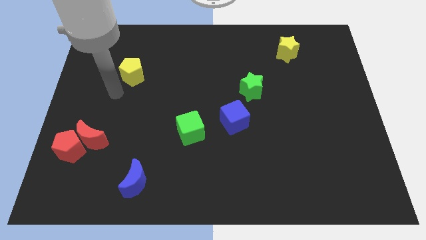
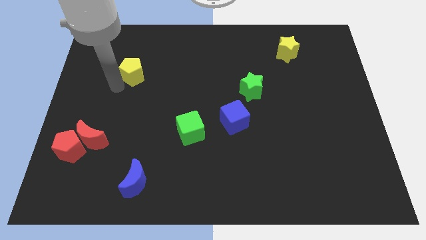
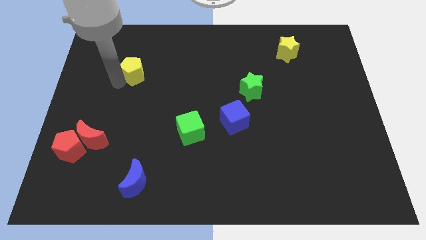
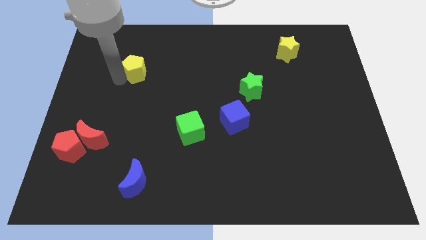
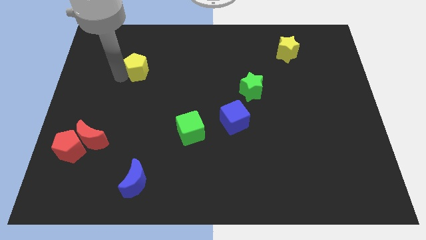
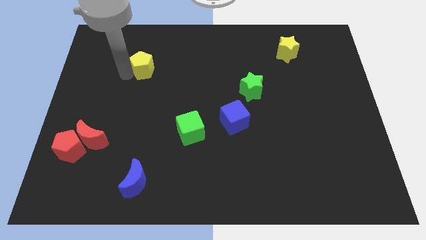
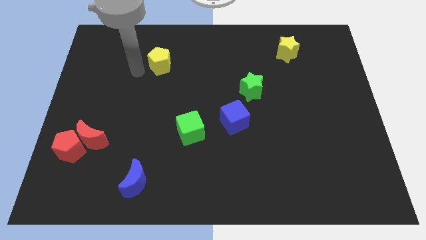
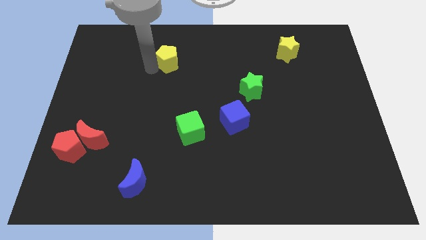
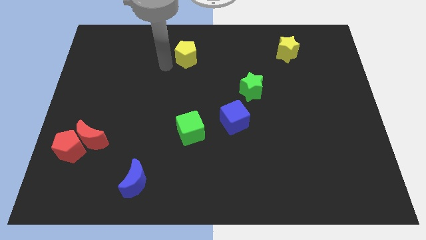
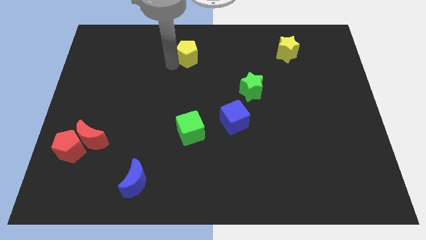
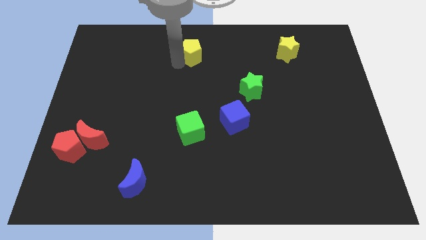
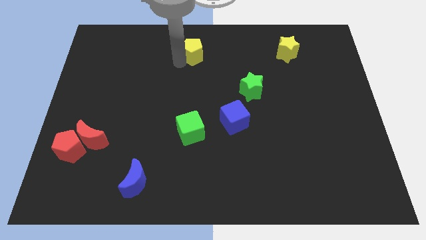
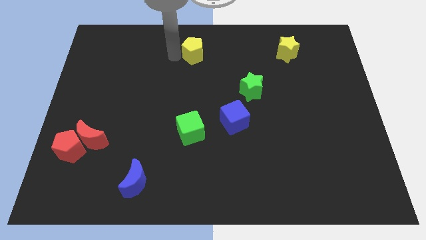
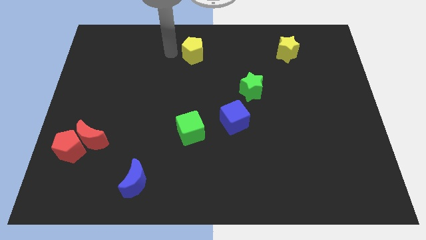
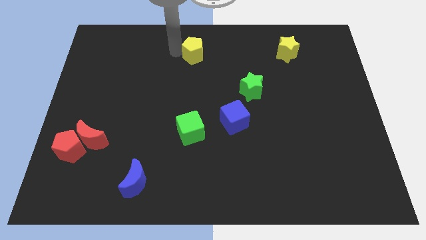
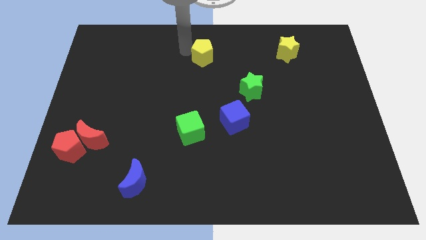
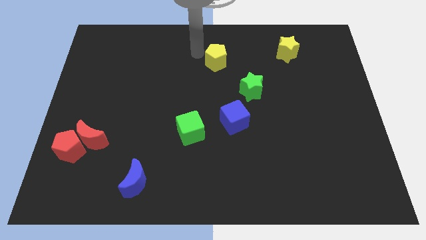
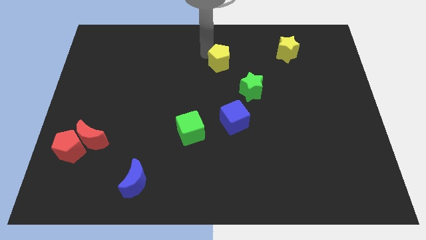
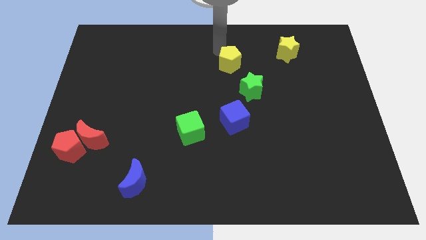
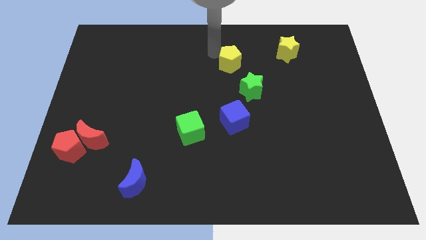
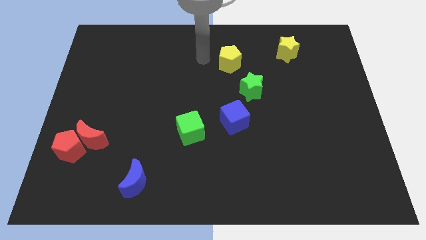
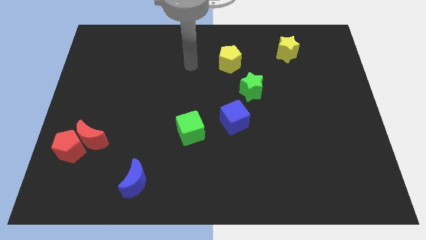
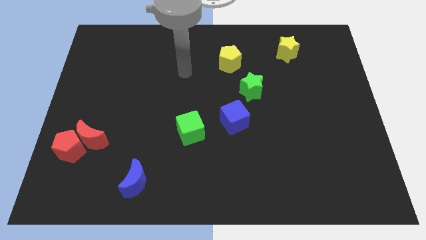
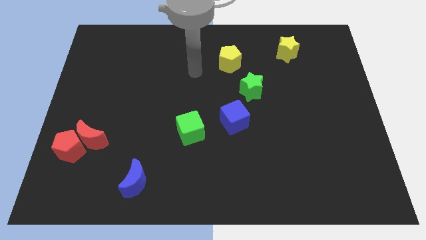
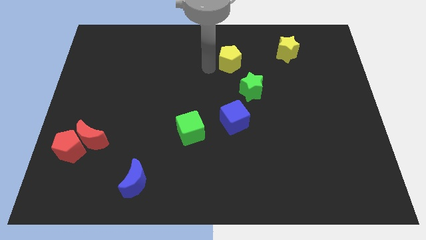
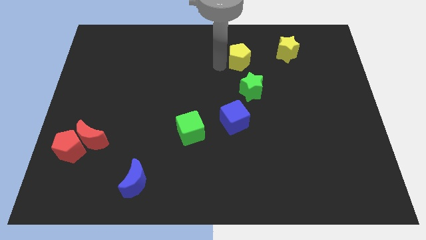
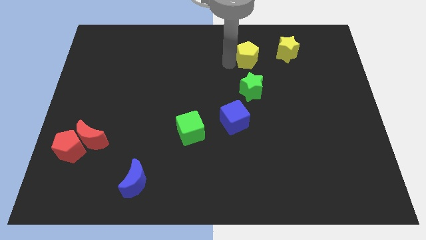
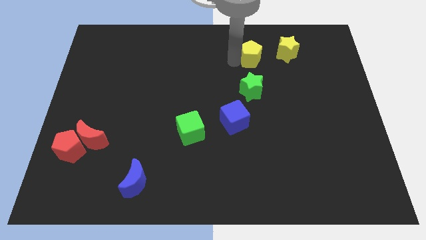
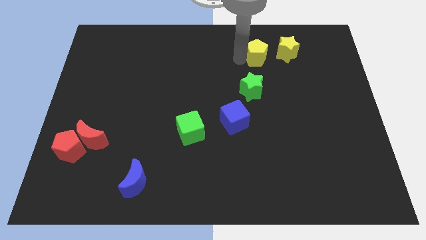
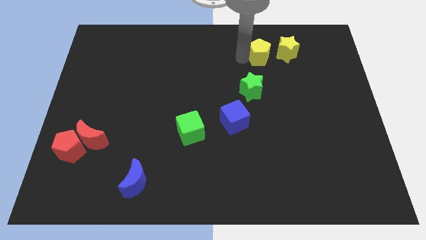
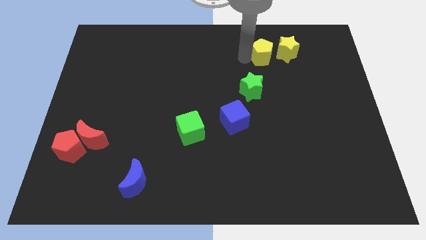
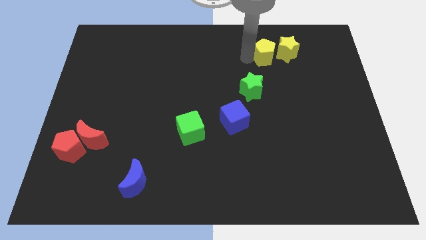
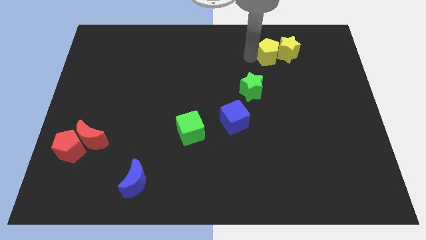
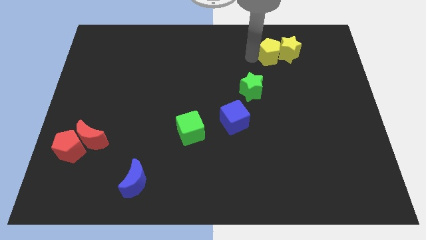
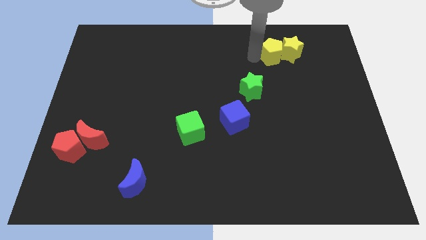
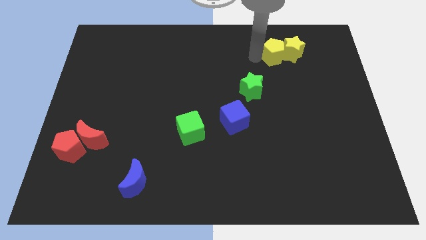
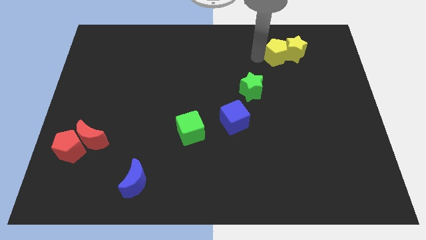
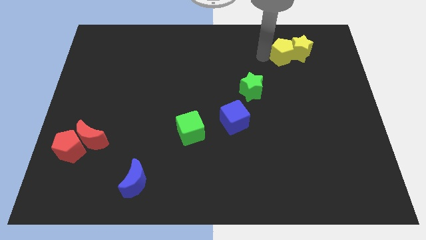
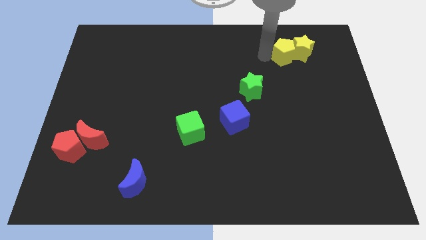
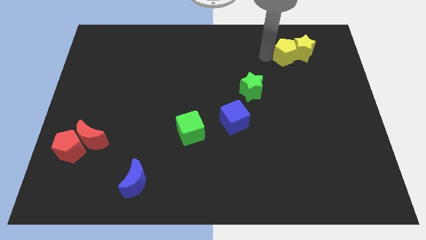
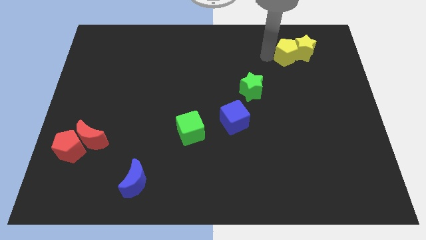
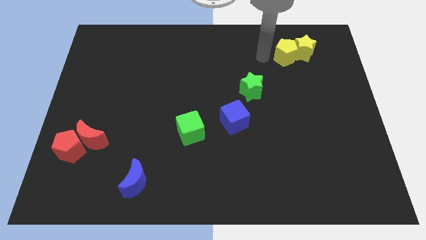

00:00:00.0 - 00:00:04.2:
slide the yellow pentagon into the yellow star

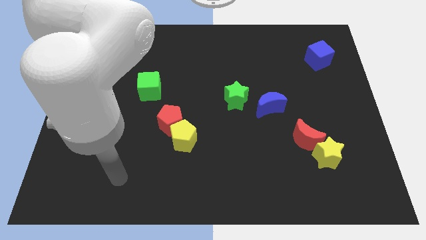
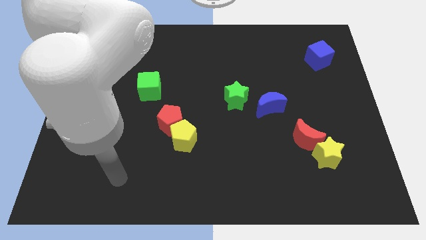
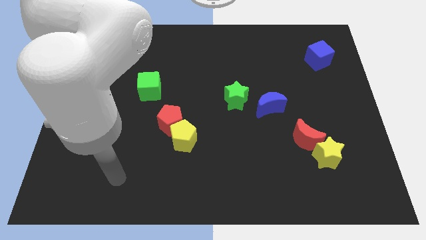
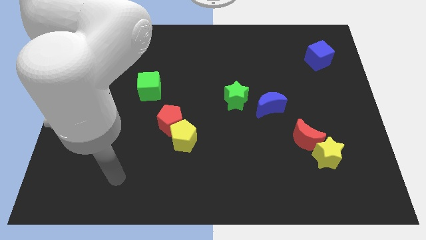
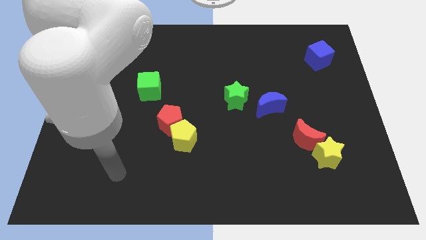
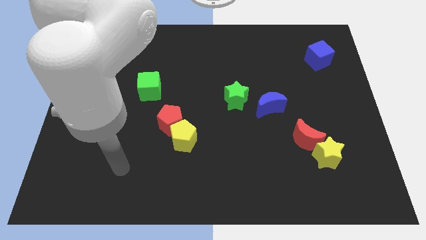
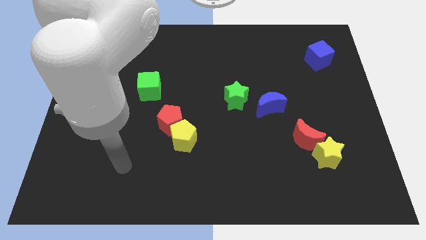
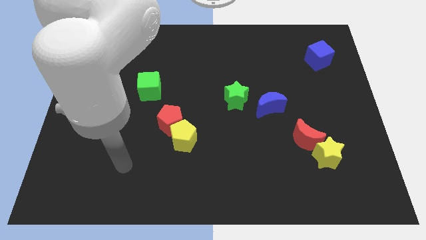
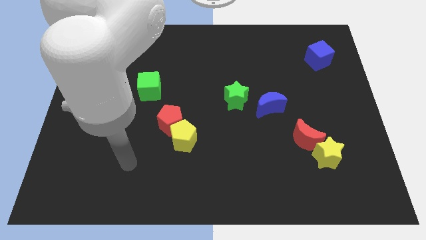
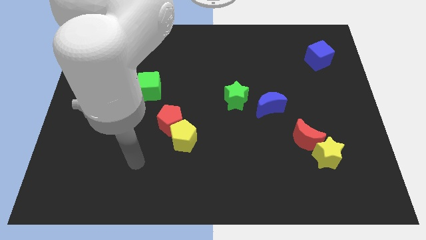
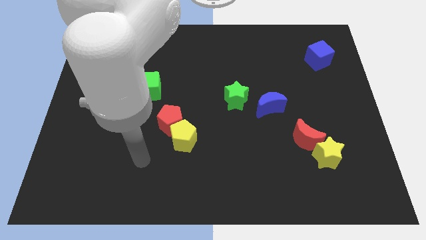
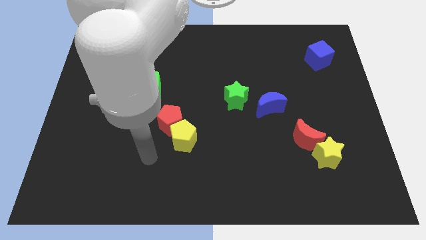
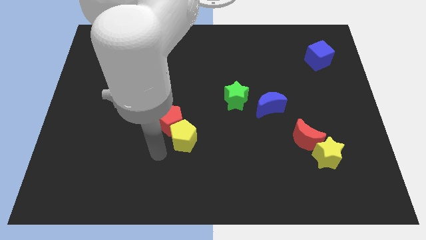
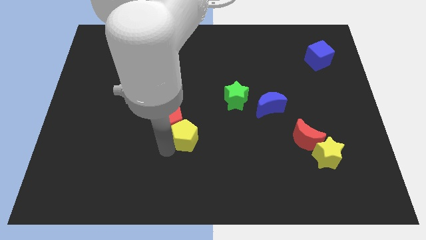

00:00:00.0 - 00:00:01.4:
move your arm to the left side of the yellow pentagon

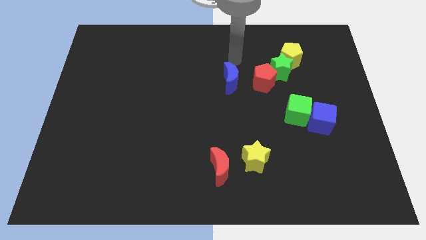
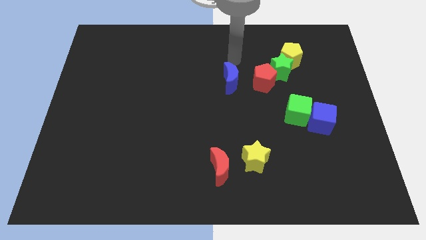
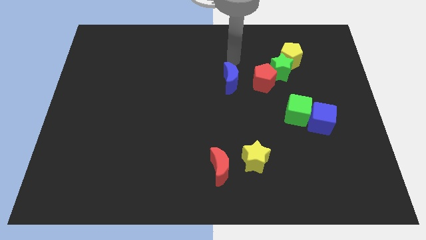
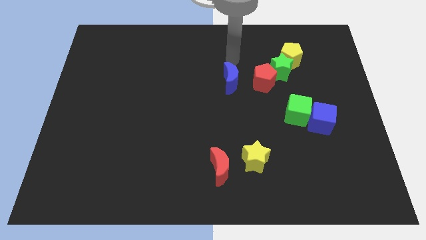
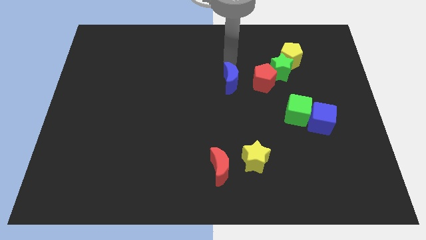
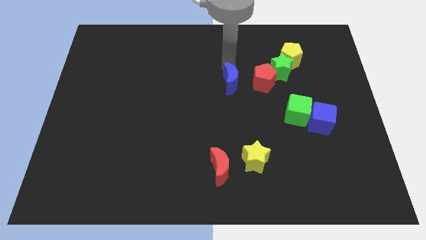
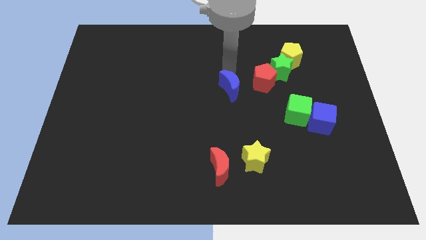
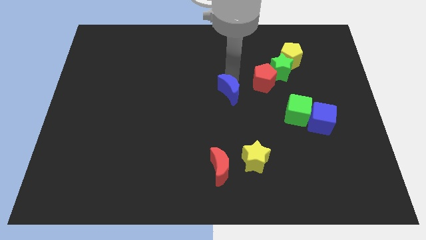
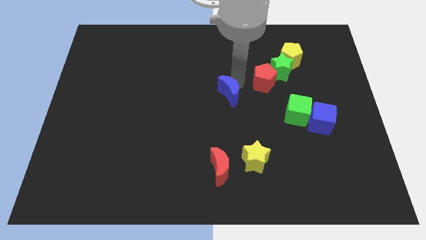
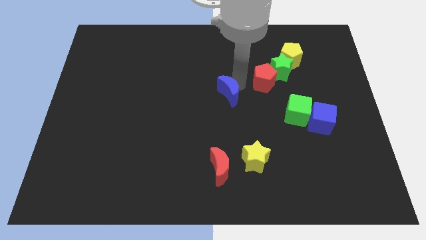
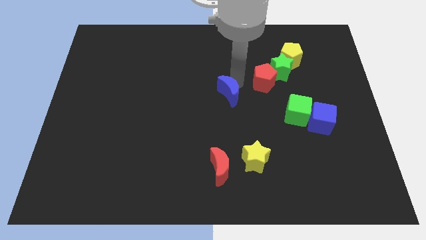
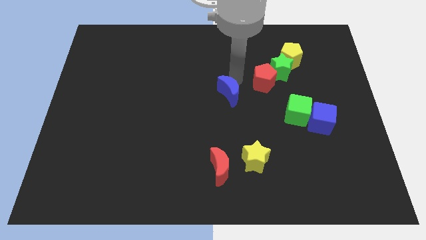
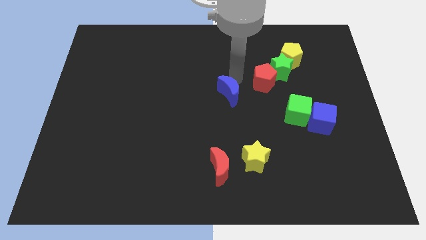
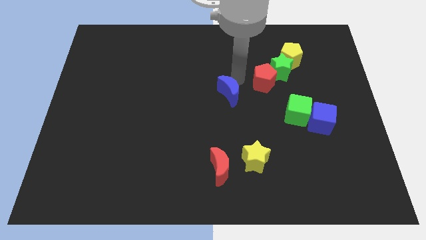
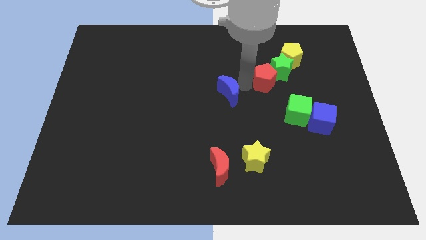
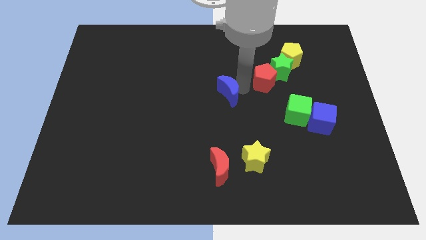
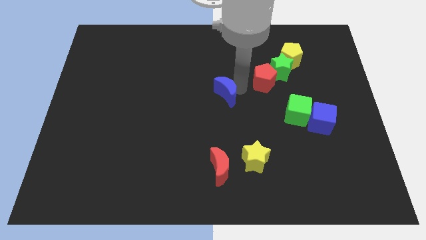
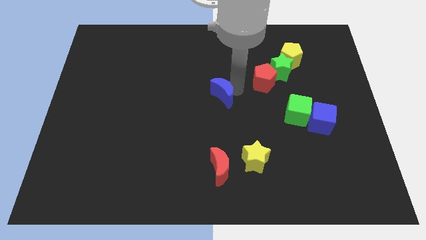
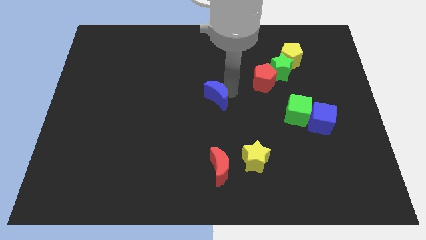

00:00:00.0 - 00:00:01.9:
place the blue moon above the red moon

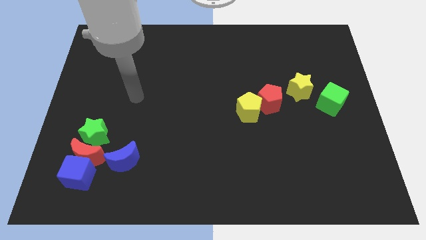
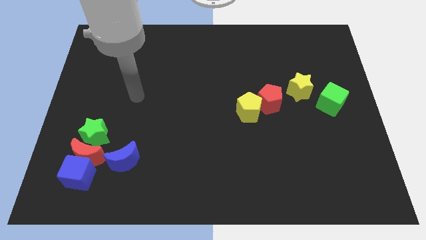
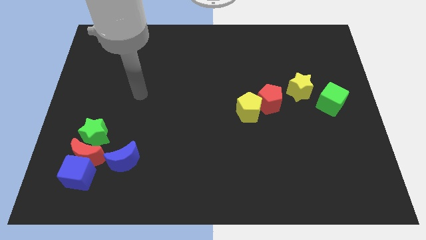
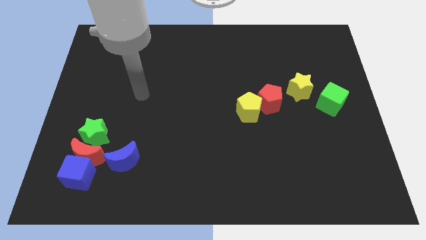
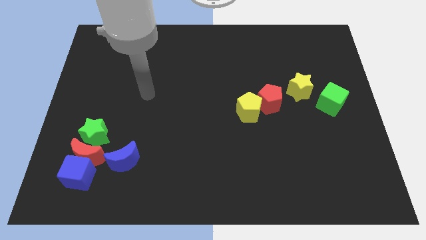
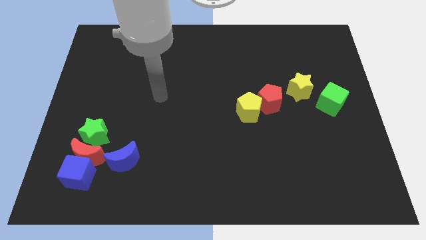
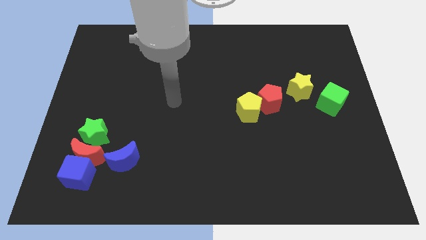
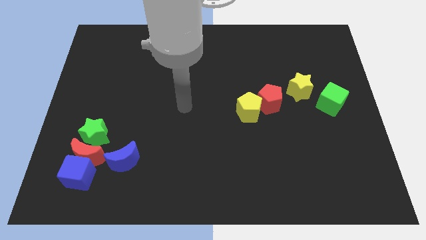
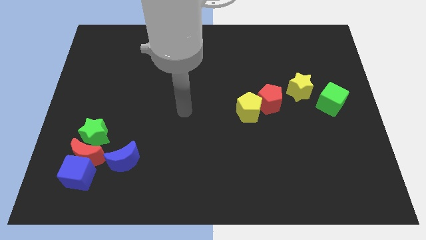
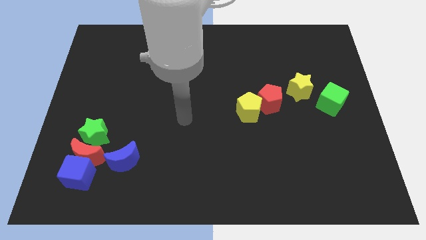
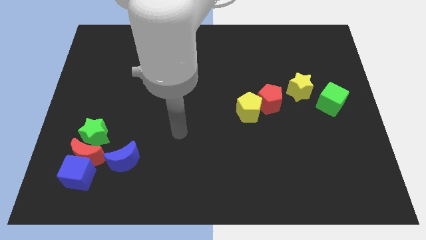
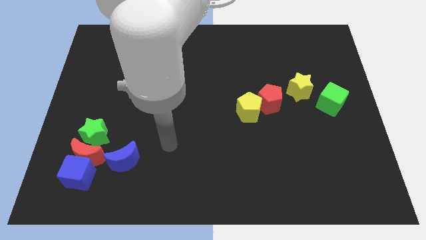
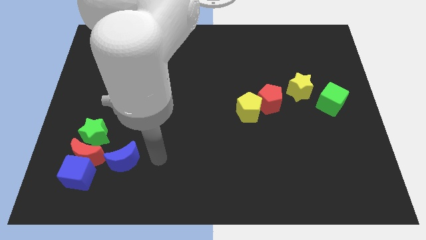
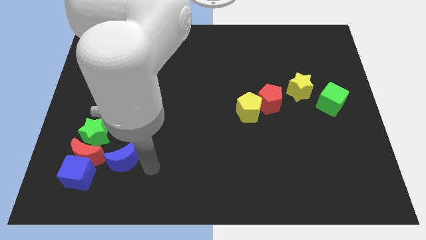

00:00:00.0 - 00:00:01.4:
move your arm to the right of the blue crescent
